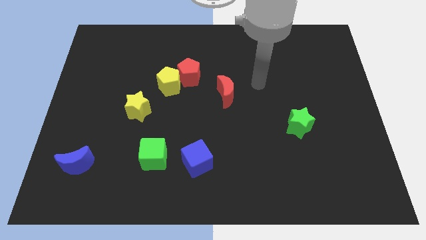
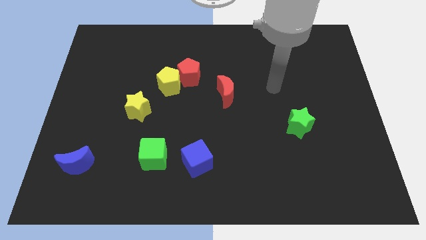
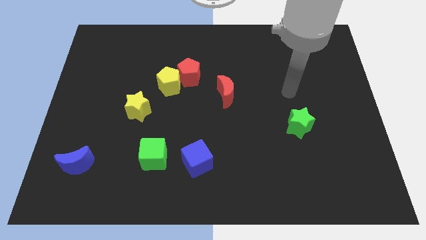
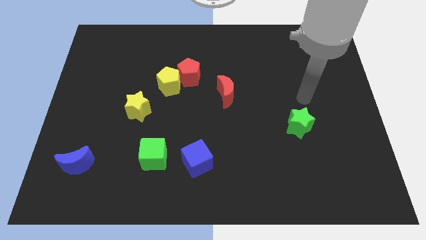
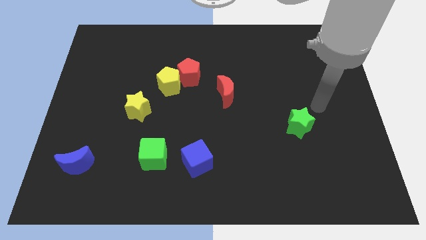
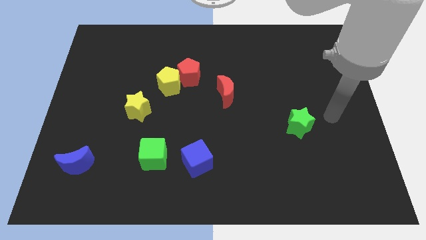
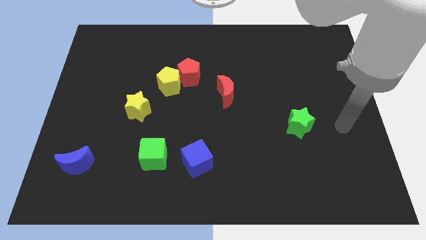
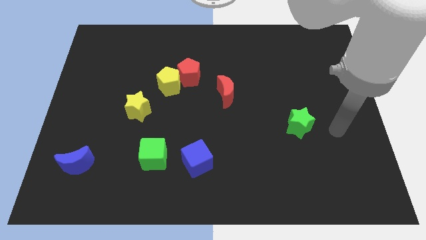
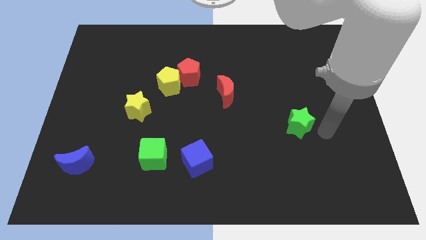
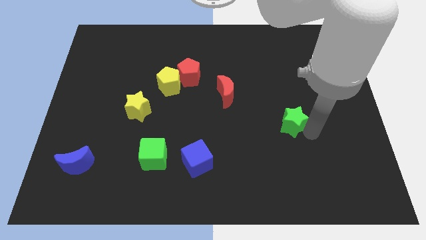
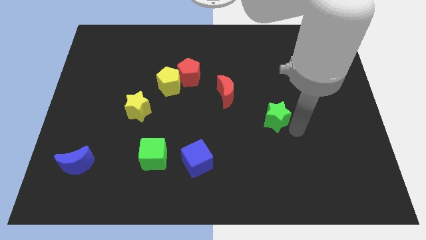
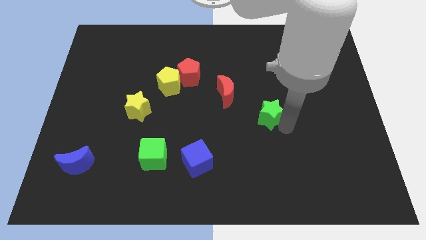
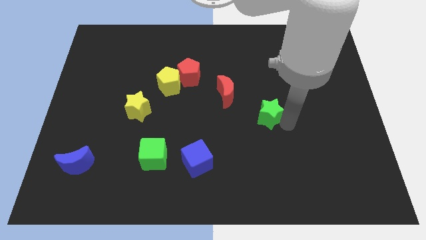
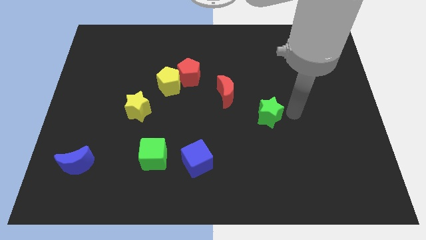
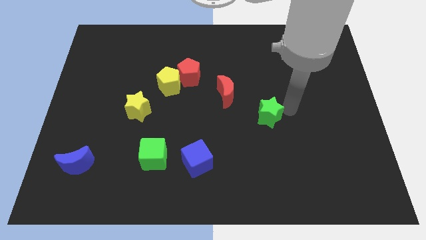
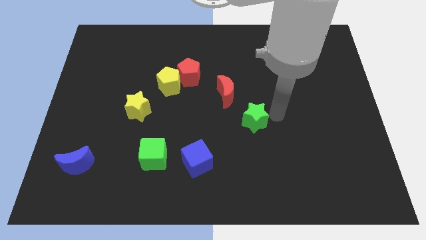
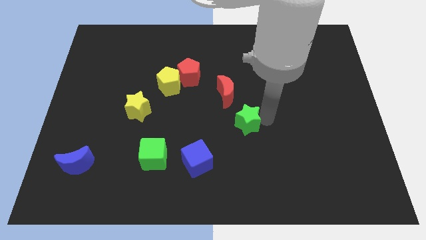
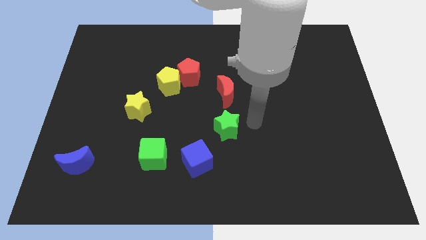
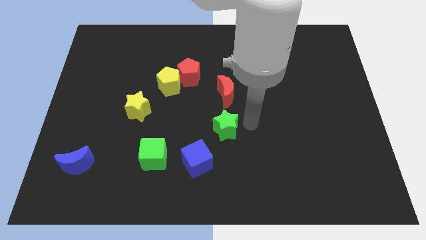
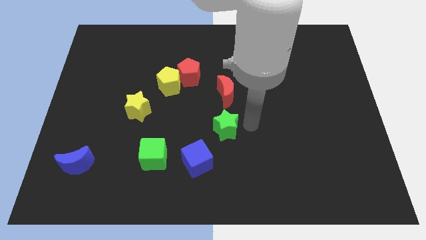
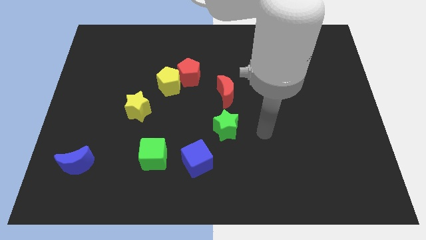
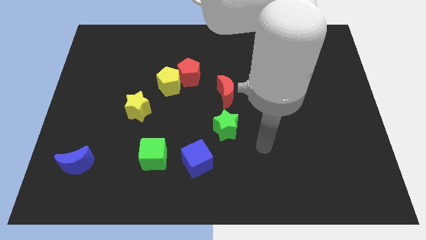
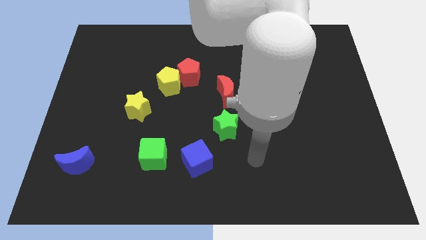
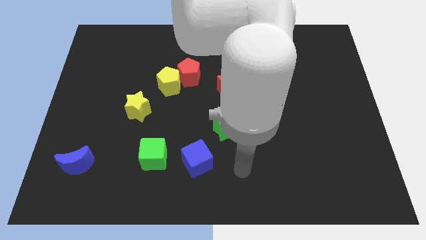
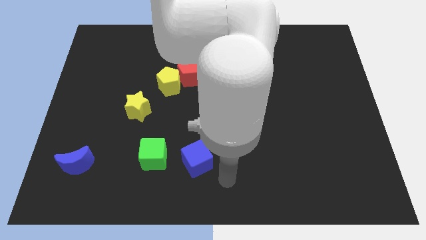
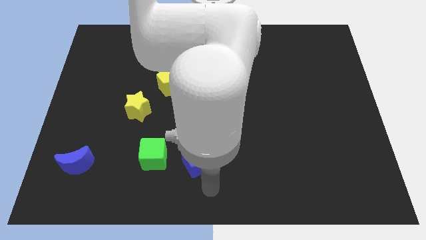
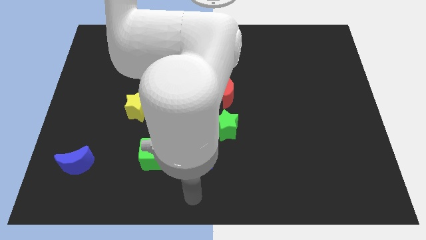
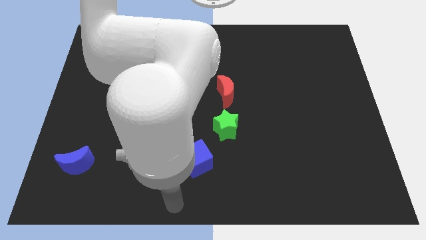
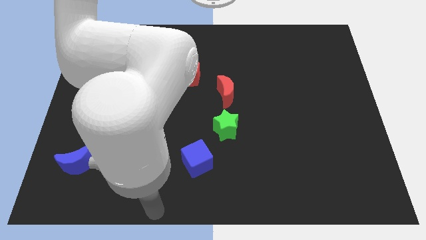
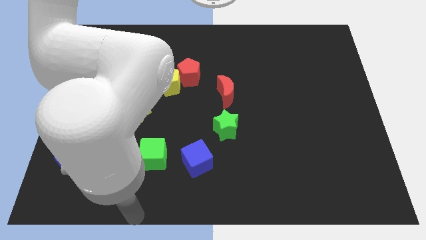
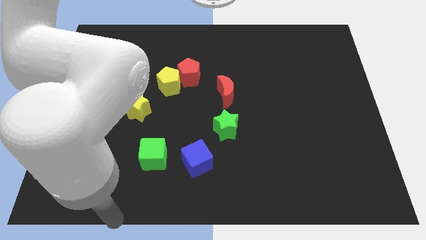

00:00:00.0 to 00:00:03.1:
push the green star below to the red crescent

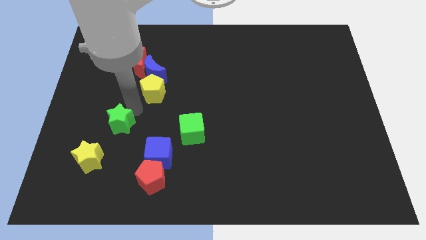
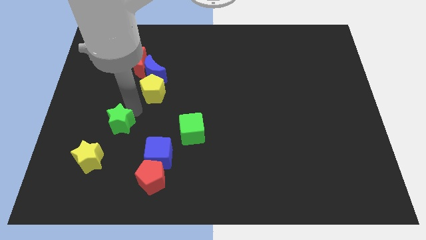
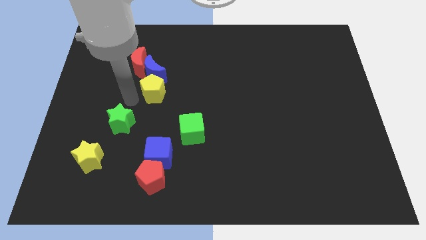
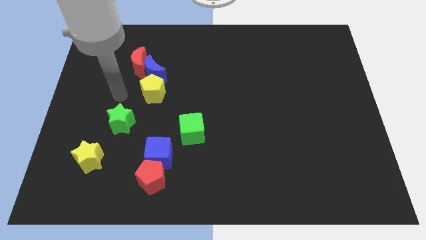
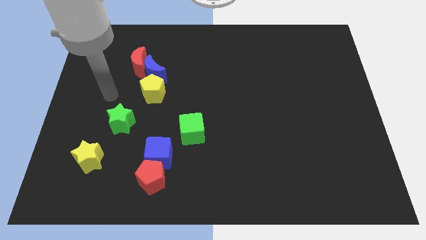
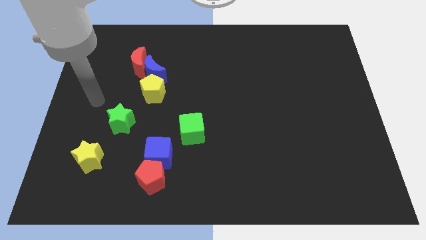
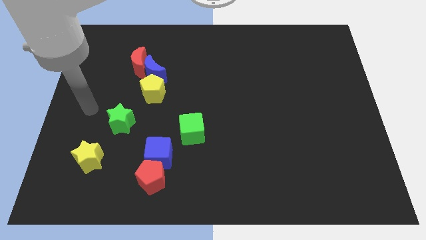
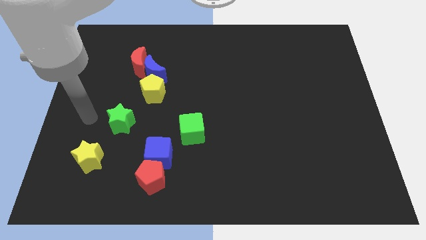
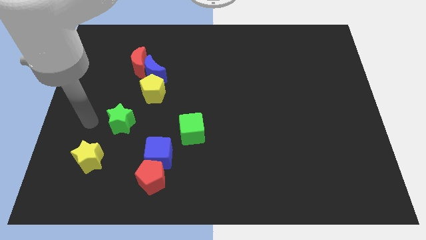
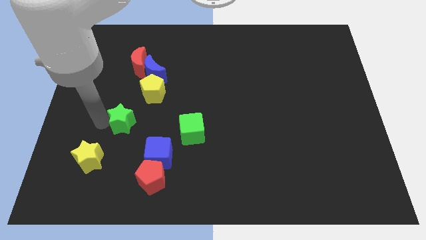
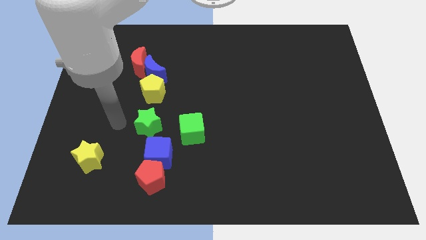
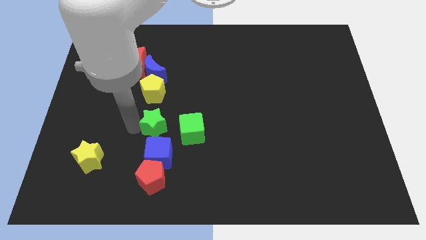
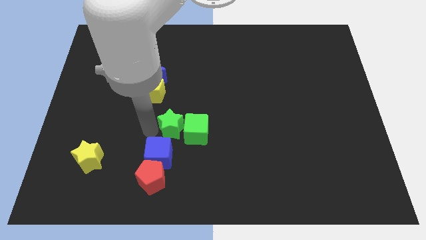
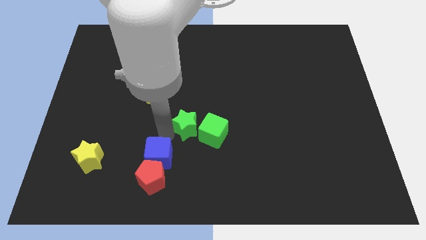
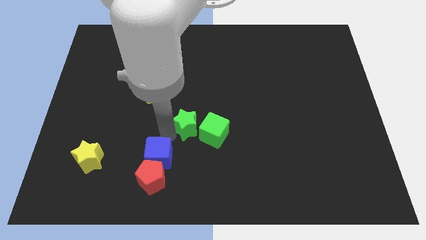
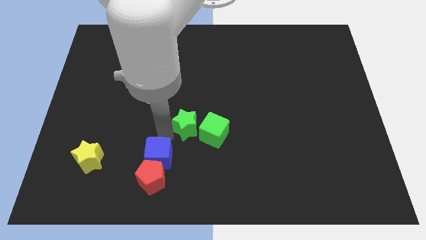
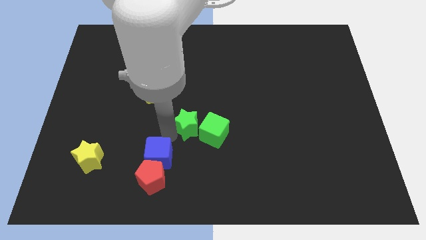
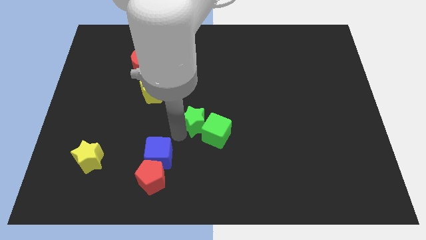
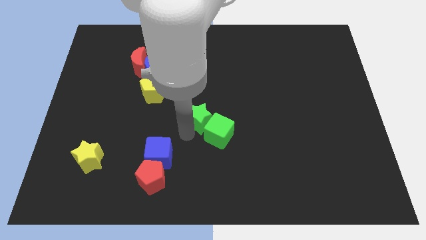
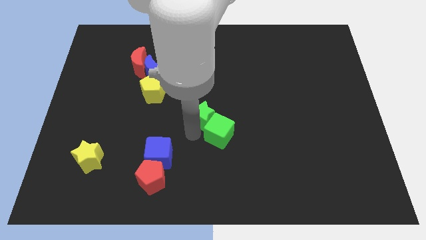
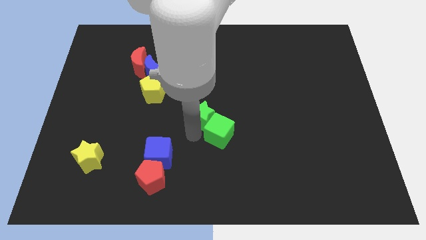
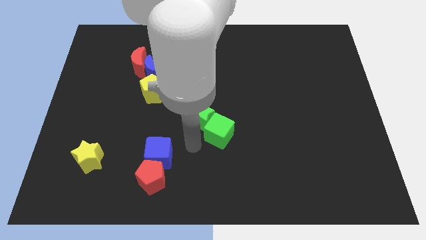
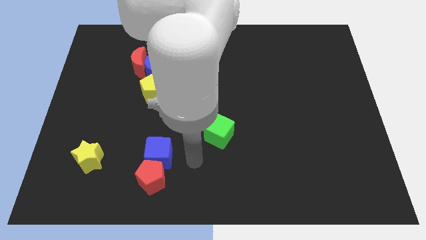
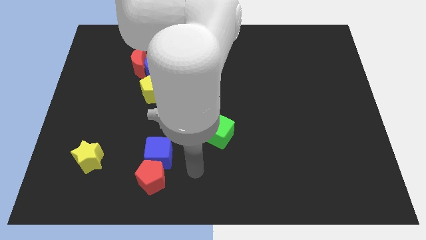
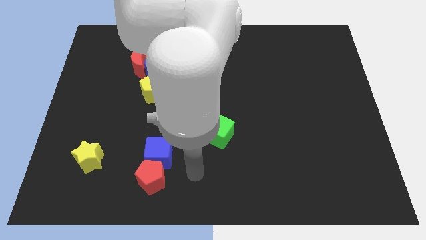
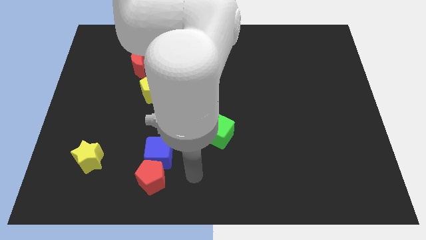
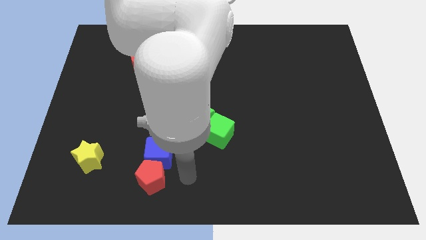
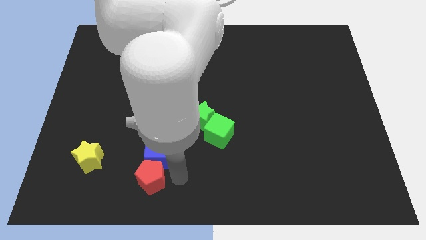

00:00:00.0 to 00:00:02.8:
push the green star in to green cube

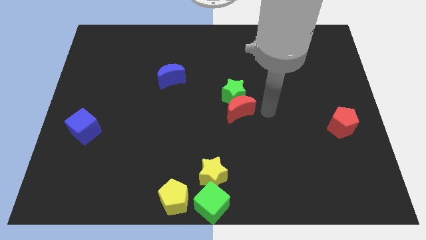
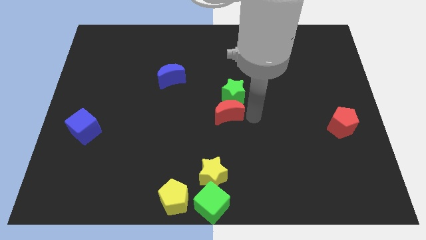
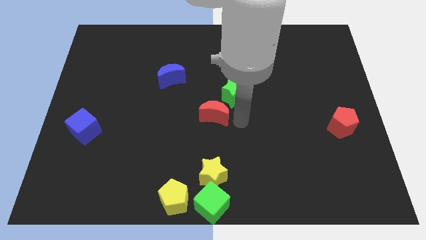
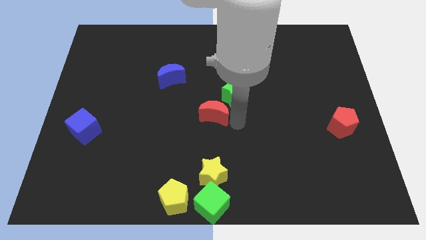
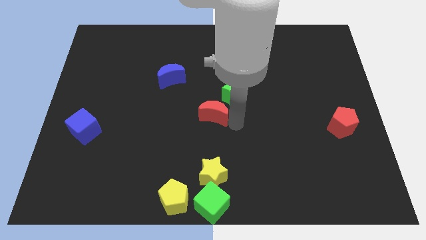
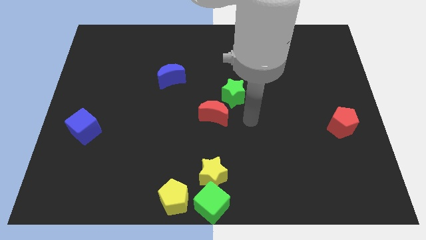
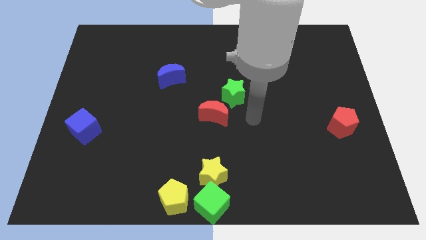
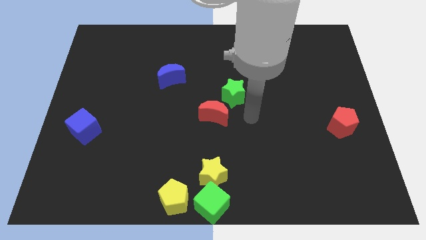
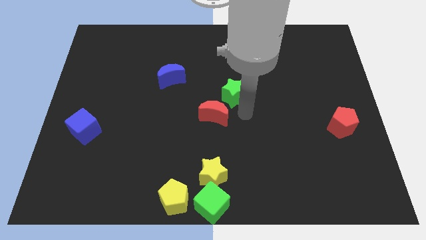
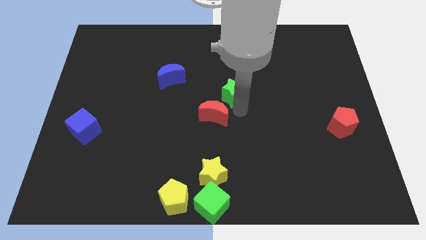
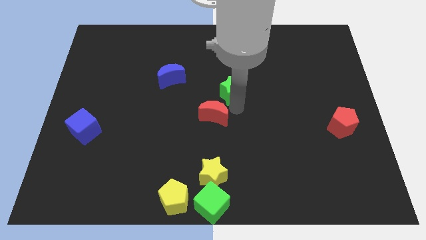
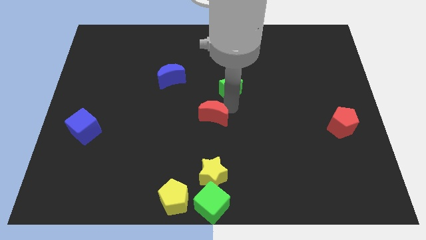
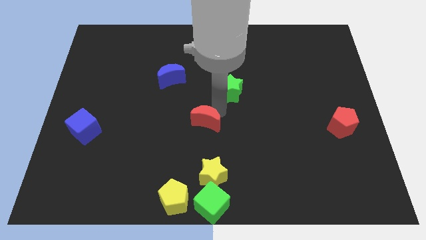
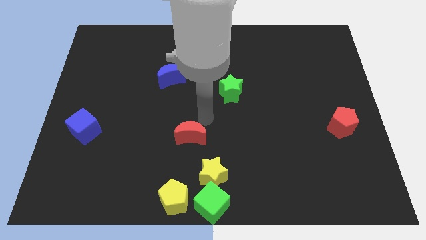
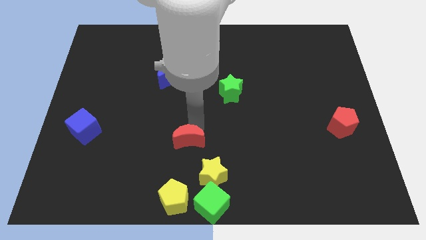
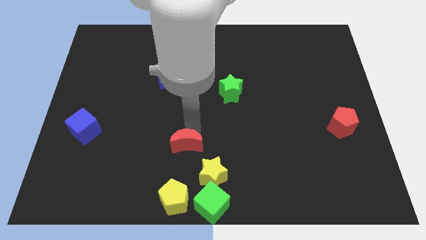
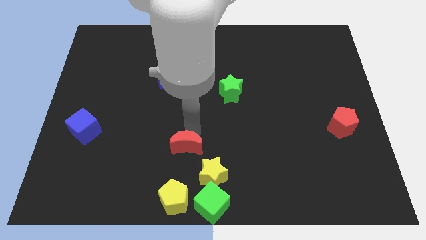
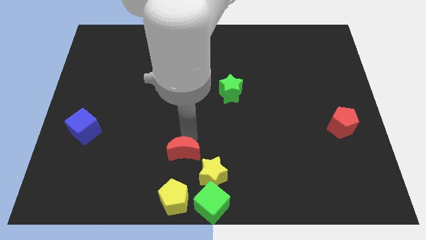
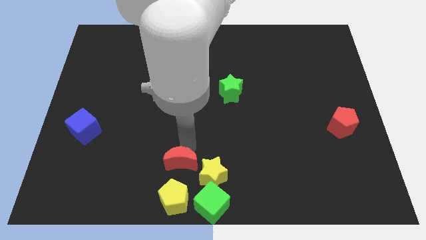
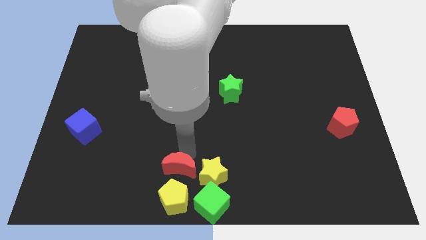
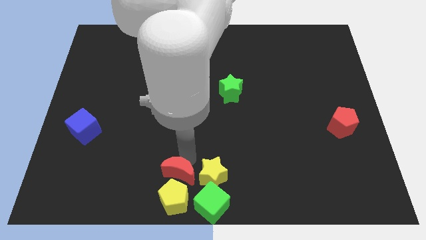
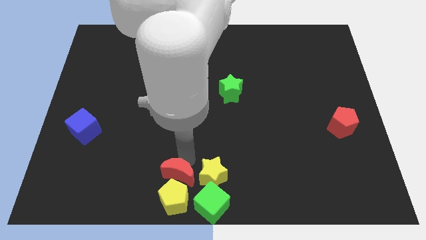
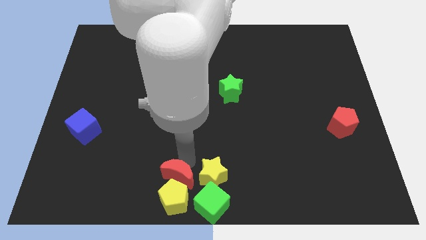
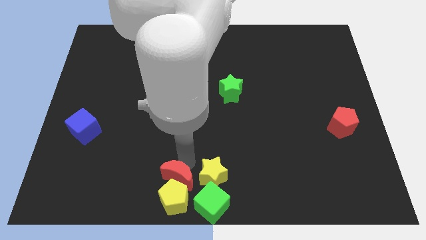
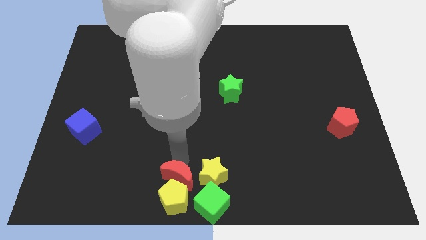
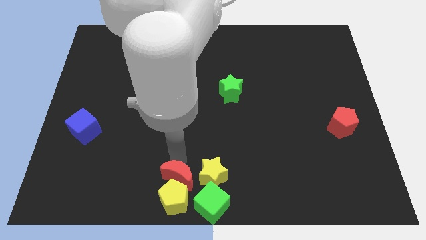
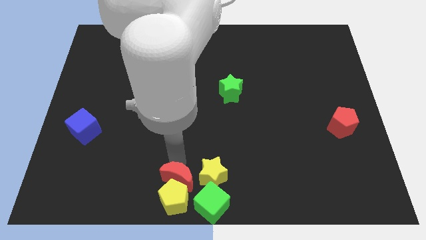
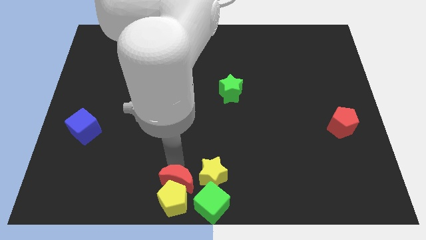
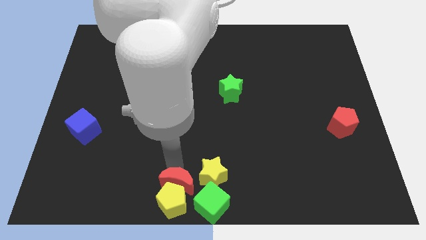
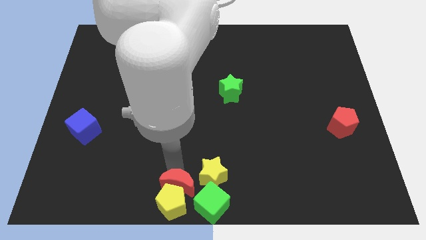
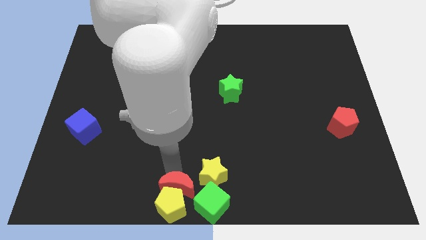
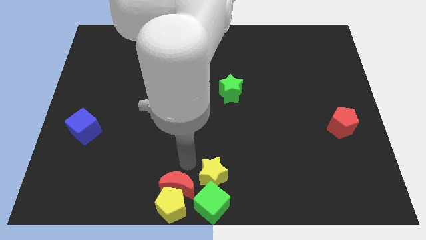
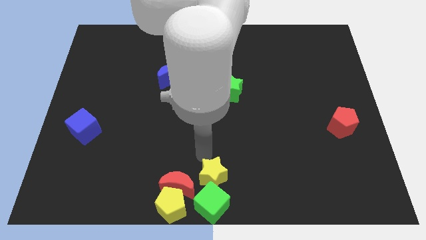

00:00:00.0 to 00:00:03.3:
push the red moon into the top side of the yellow pentagon
